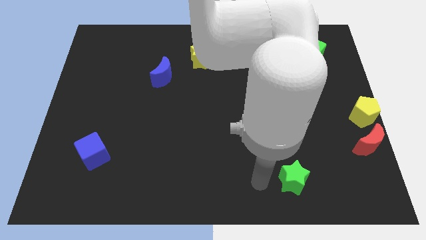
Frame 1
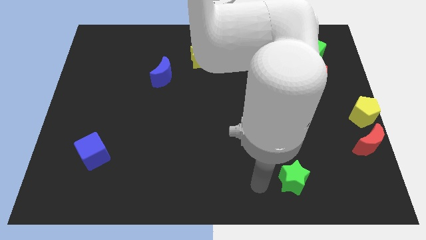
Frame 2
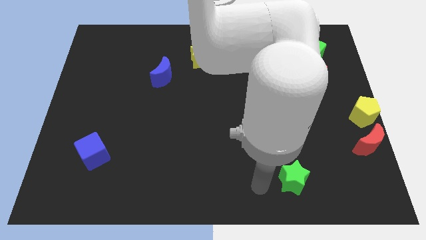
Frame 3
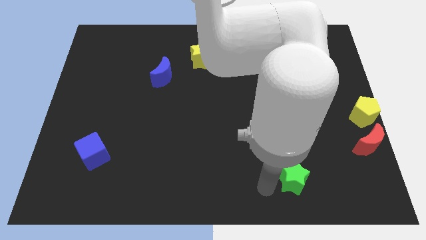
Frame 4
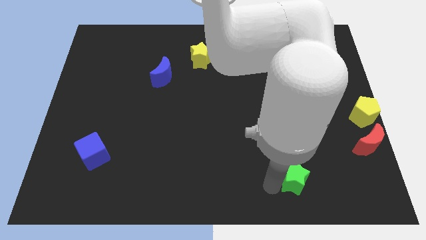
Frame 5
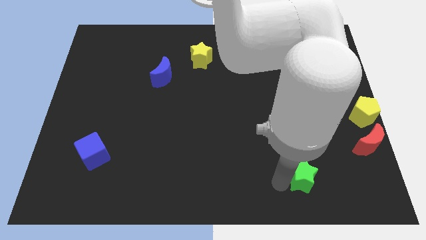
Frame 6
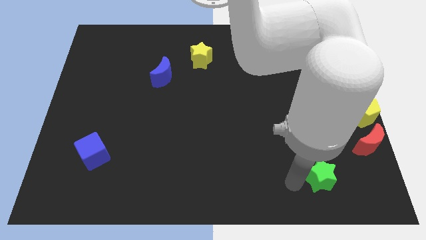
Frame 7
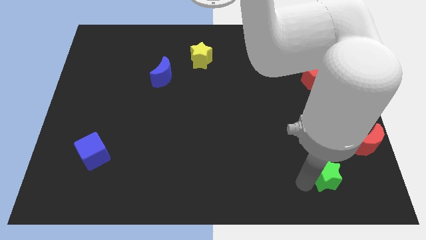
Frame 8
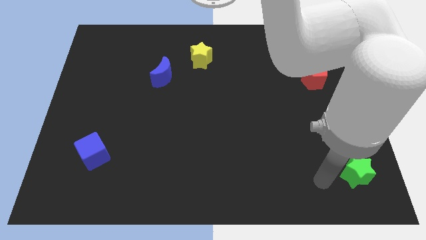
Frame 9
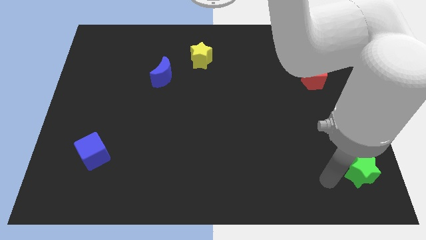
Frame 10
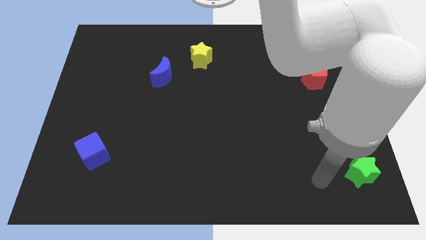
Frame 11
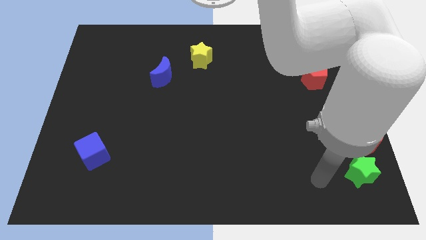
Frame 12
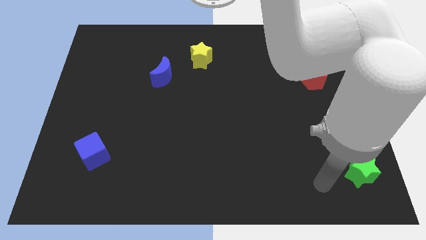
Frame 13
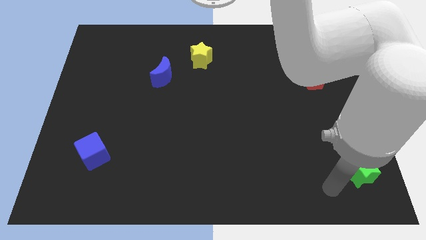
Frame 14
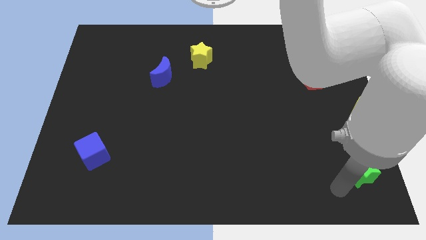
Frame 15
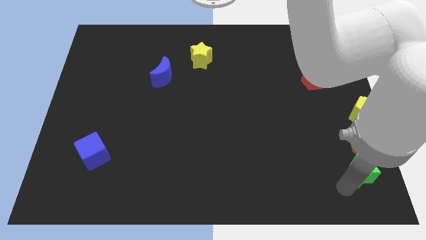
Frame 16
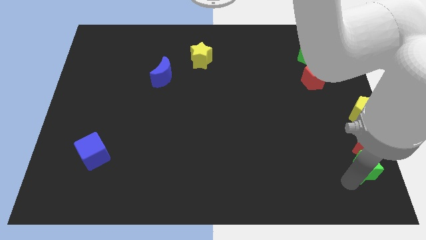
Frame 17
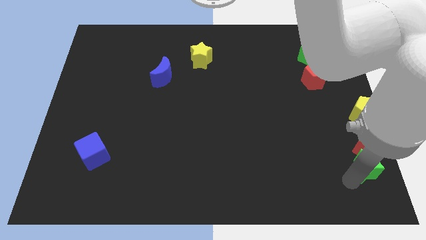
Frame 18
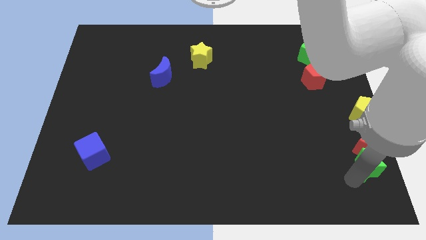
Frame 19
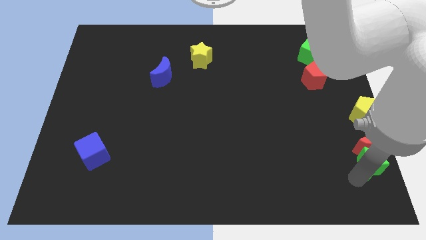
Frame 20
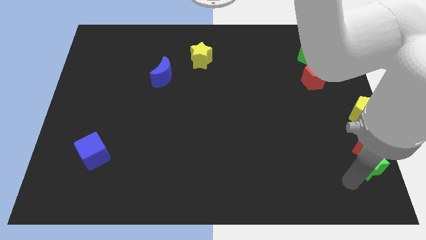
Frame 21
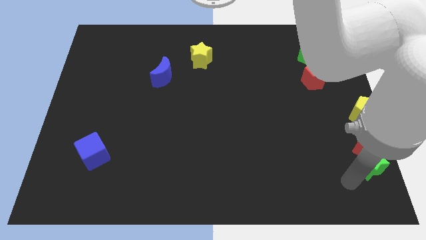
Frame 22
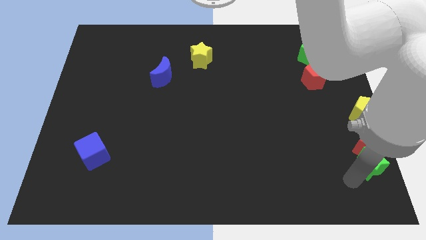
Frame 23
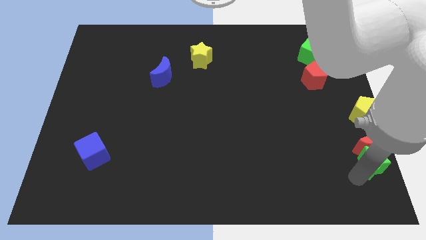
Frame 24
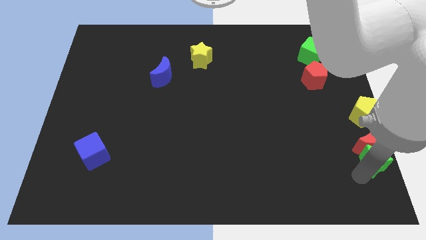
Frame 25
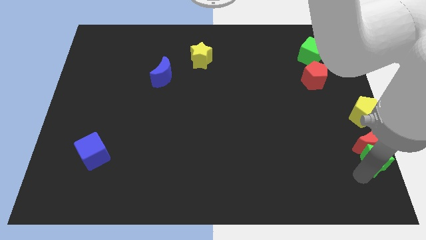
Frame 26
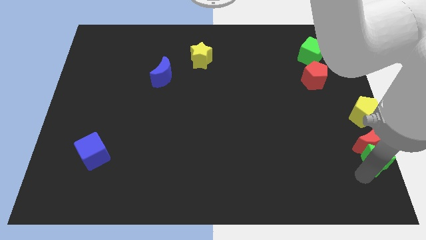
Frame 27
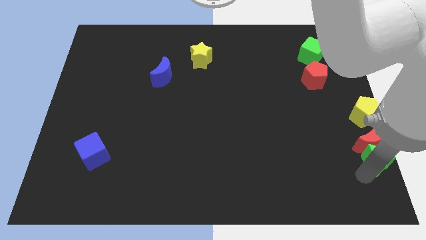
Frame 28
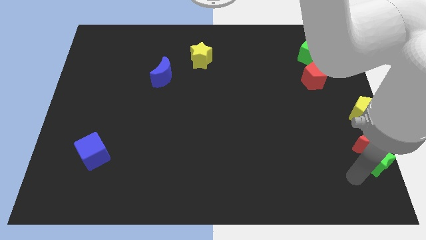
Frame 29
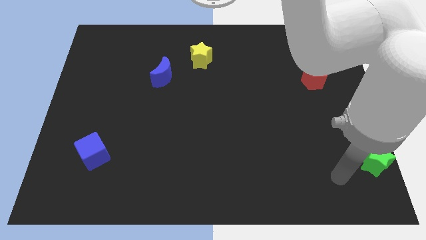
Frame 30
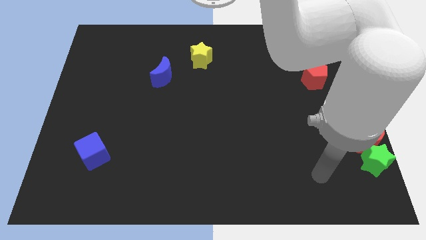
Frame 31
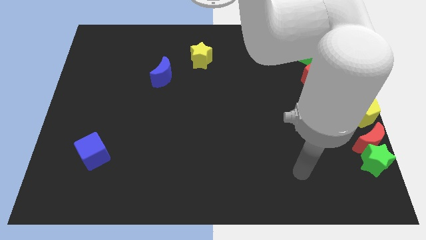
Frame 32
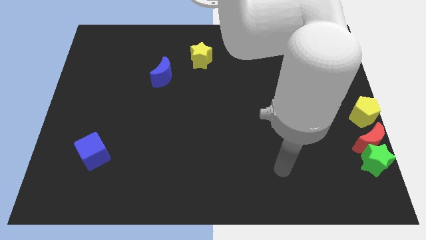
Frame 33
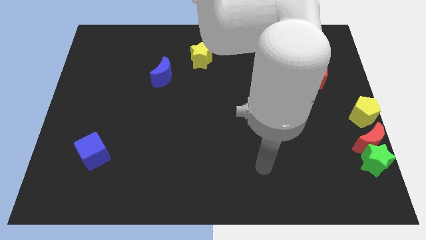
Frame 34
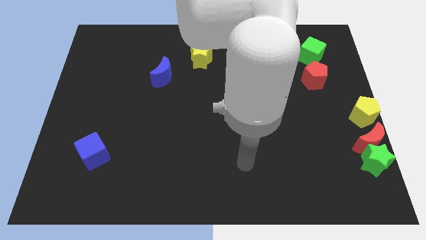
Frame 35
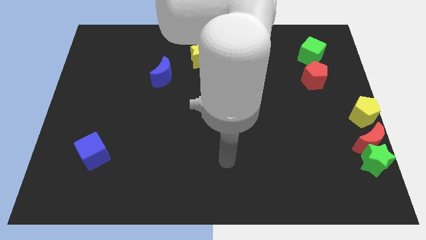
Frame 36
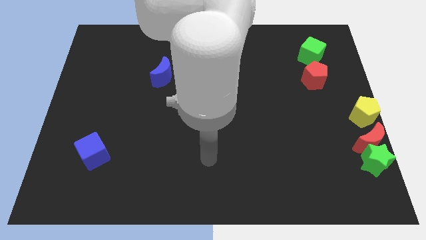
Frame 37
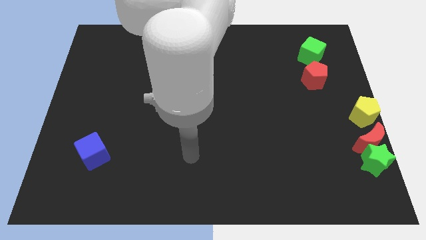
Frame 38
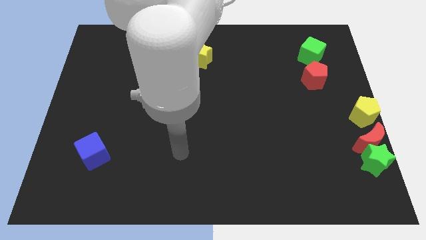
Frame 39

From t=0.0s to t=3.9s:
move green star below the red moon

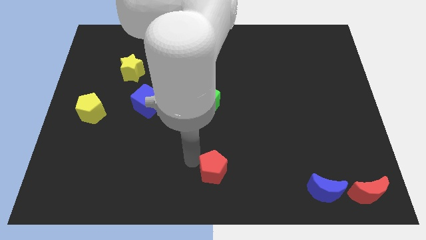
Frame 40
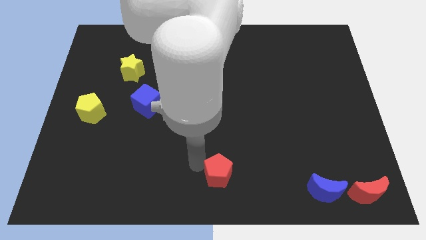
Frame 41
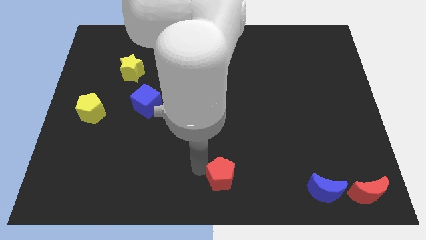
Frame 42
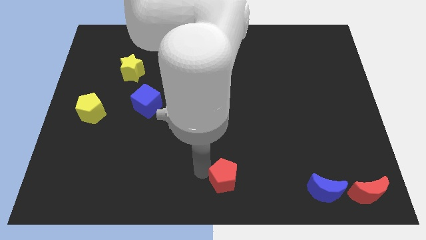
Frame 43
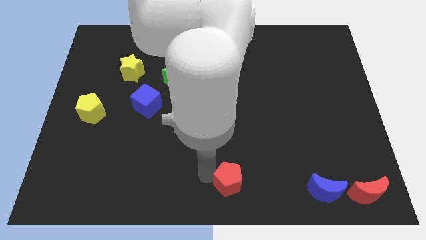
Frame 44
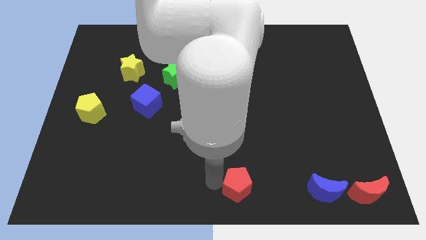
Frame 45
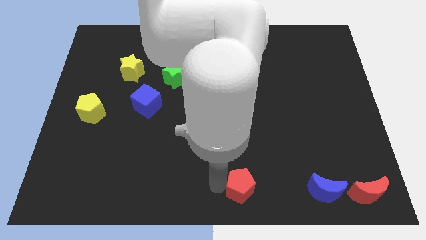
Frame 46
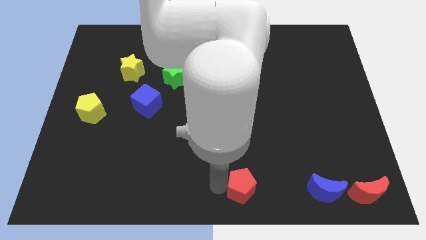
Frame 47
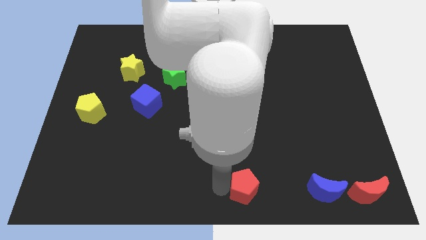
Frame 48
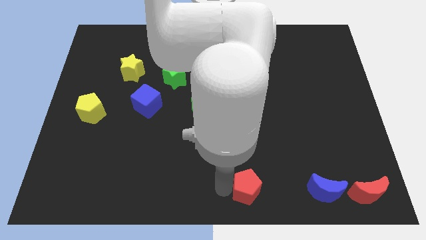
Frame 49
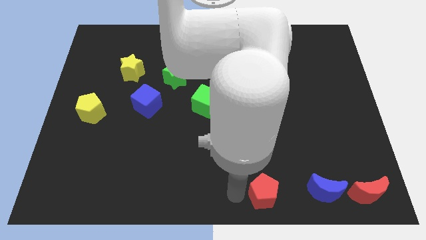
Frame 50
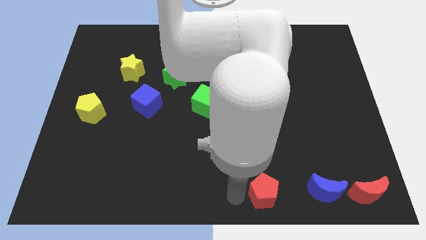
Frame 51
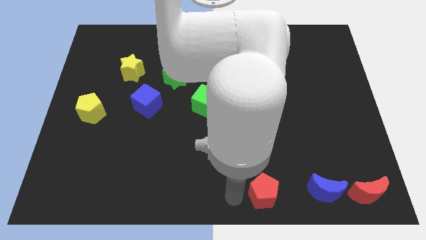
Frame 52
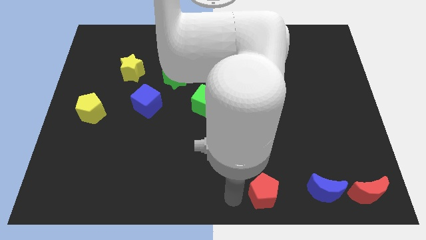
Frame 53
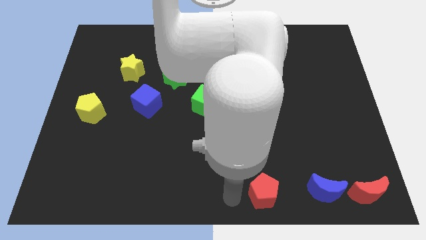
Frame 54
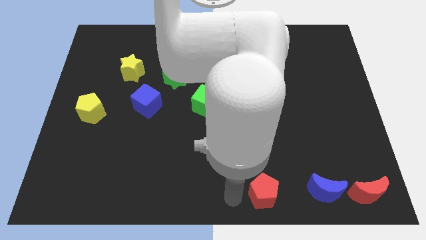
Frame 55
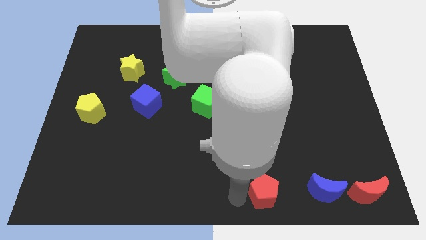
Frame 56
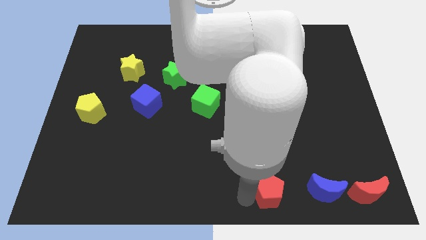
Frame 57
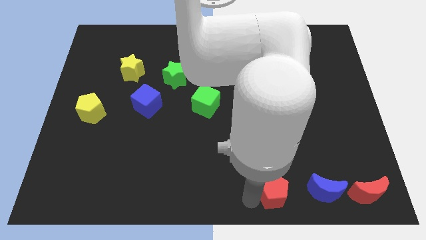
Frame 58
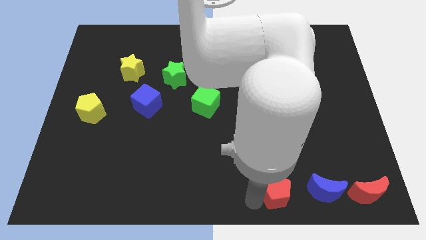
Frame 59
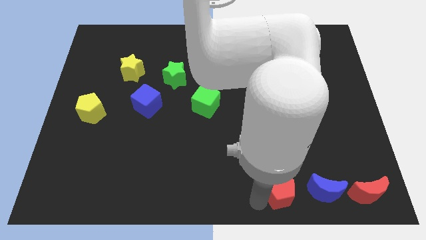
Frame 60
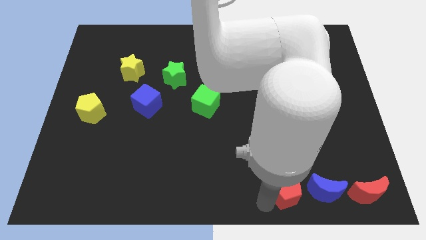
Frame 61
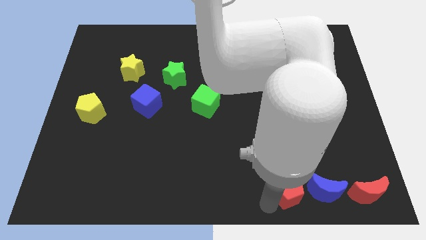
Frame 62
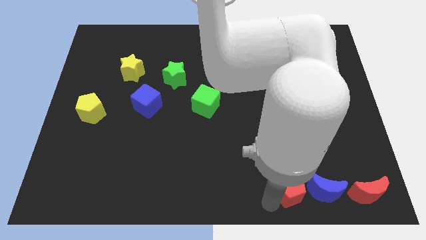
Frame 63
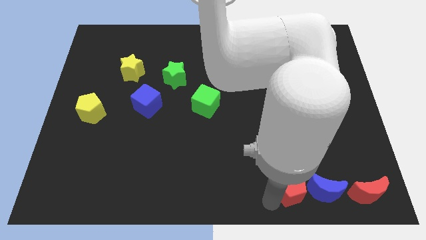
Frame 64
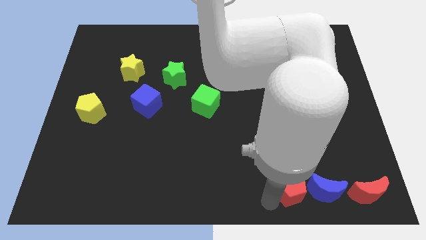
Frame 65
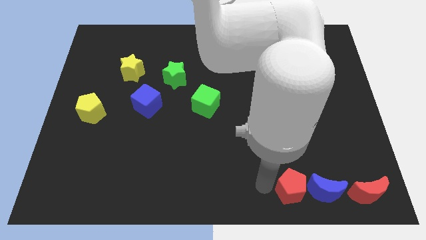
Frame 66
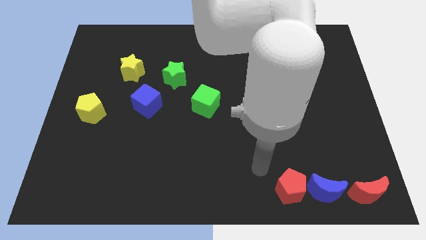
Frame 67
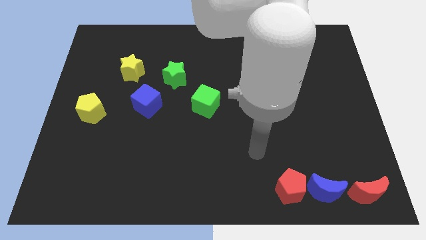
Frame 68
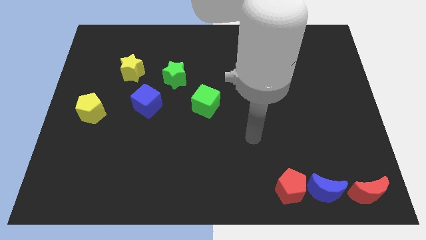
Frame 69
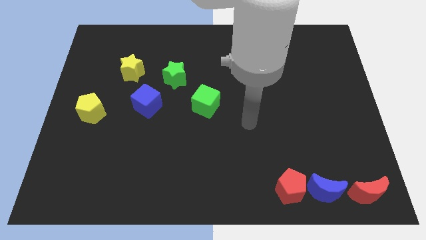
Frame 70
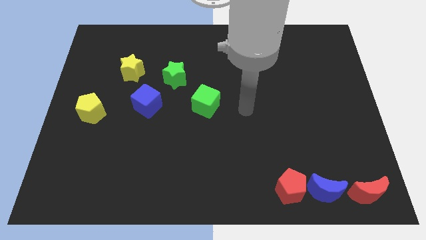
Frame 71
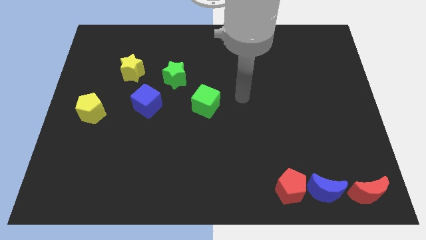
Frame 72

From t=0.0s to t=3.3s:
place the red pentagon to the left side of blue crescent

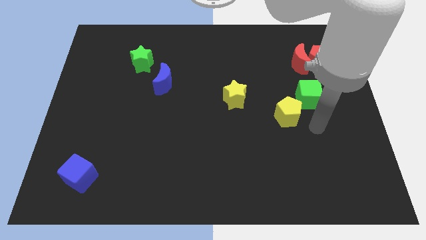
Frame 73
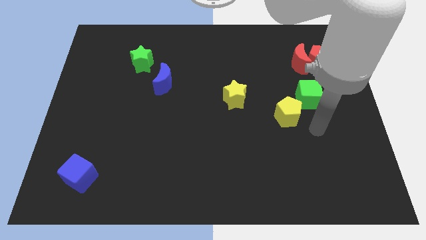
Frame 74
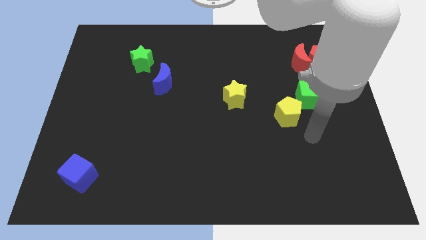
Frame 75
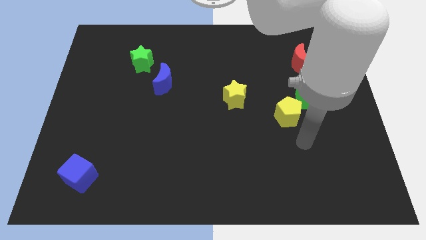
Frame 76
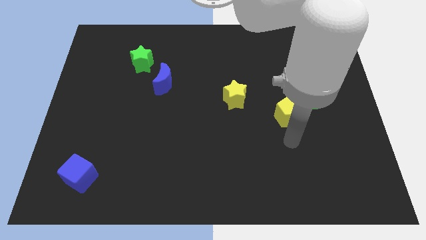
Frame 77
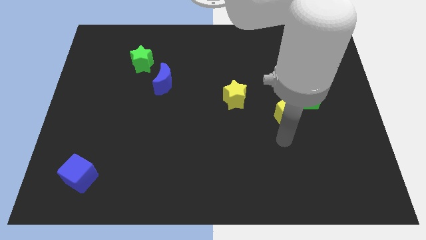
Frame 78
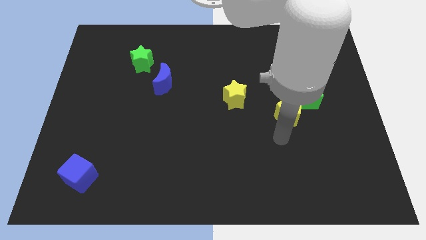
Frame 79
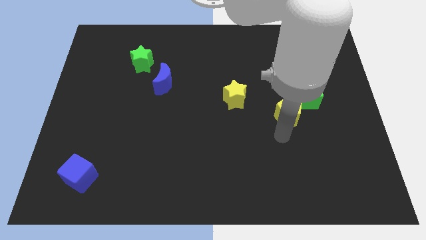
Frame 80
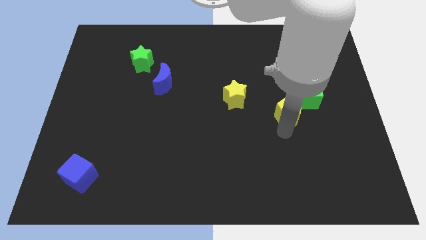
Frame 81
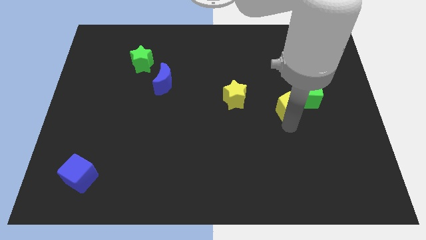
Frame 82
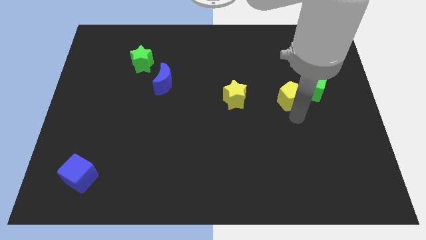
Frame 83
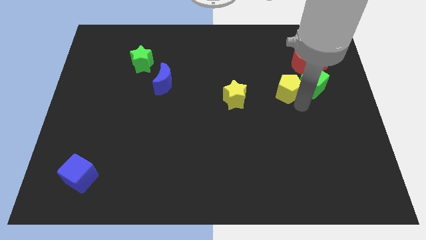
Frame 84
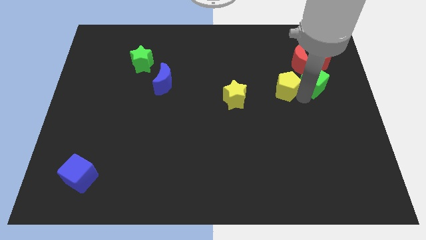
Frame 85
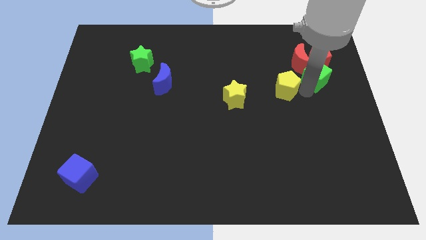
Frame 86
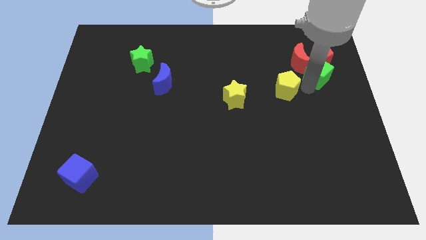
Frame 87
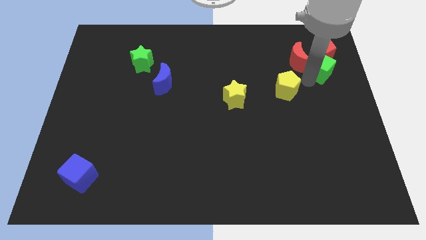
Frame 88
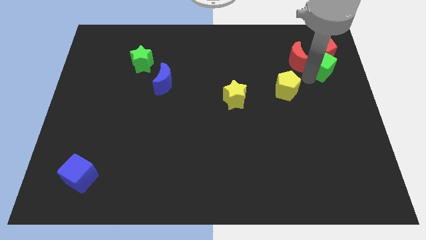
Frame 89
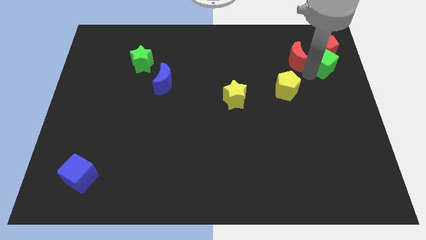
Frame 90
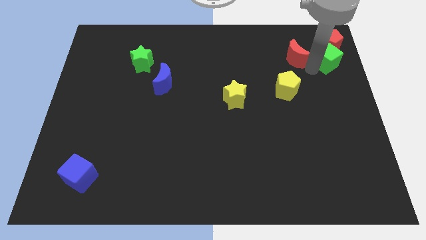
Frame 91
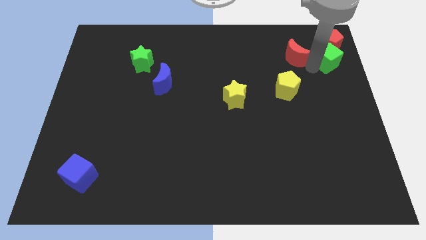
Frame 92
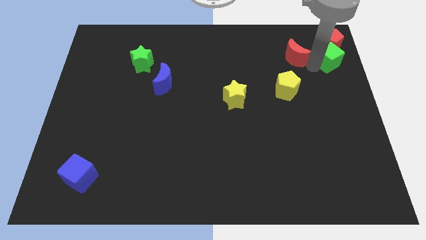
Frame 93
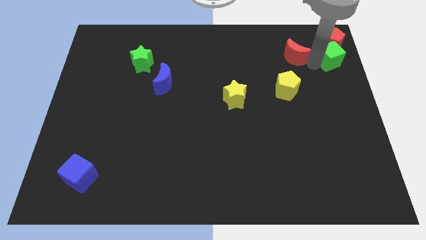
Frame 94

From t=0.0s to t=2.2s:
push the green cube into the red pentagon
